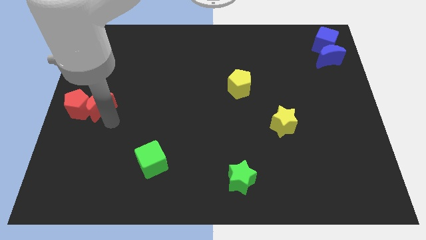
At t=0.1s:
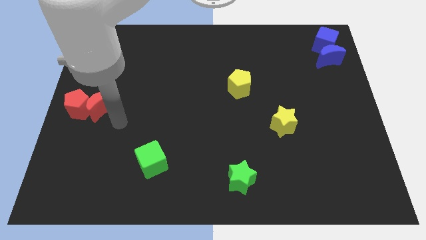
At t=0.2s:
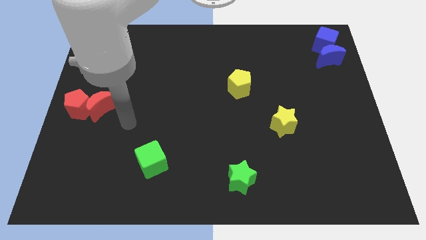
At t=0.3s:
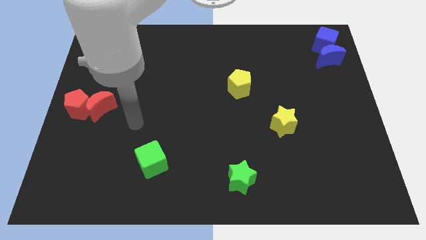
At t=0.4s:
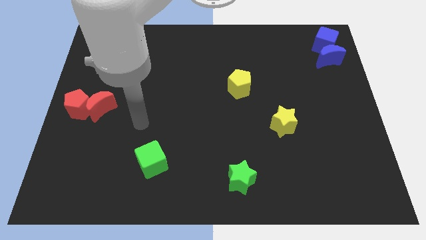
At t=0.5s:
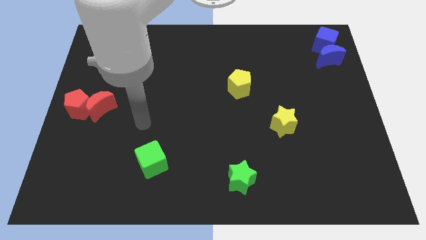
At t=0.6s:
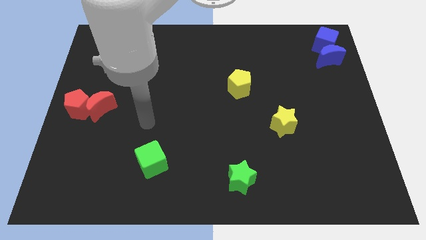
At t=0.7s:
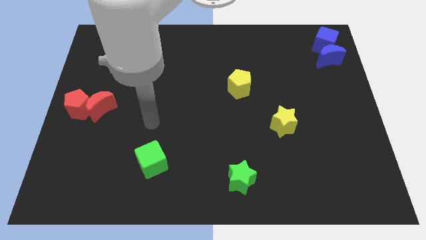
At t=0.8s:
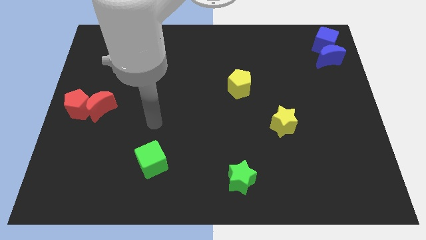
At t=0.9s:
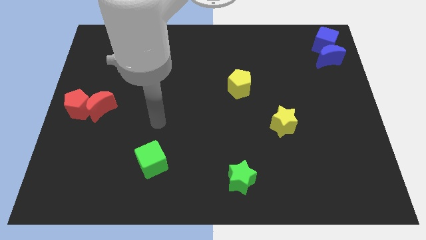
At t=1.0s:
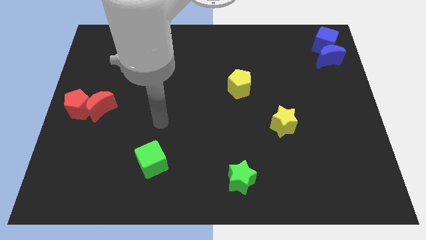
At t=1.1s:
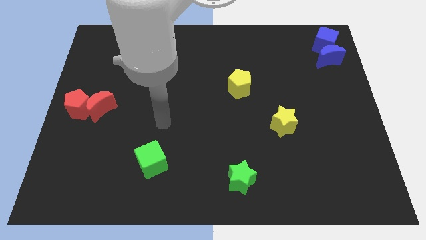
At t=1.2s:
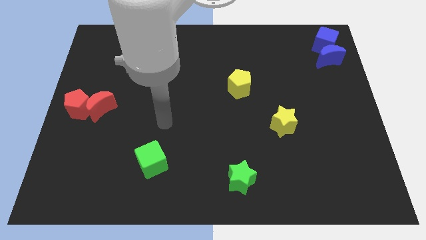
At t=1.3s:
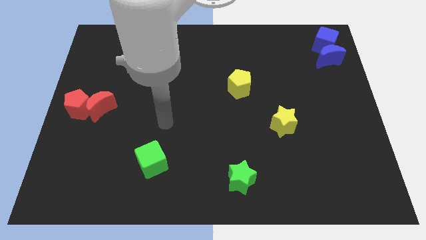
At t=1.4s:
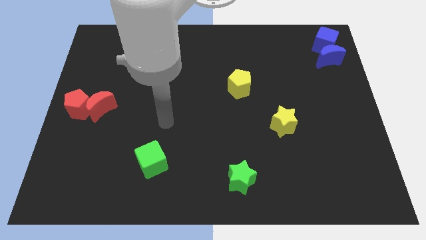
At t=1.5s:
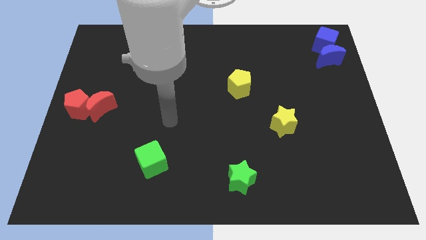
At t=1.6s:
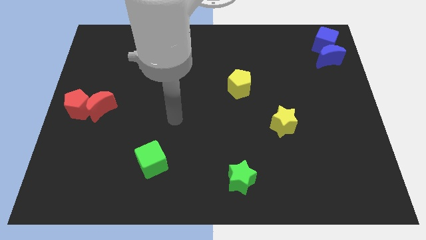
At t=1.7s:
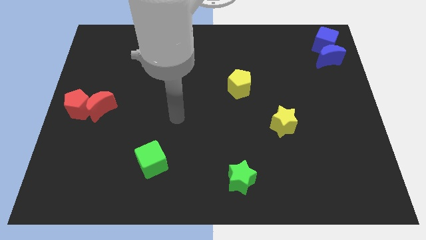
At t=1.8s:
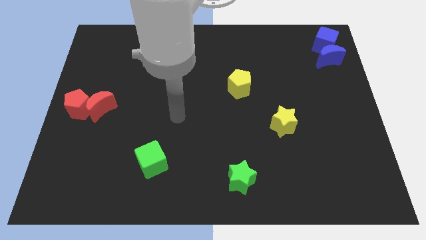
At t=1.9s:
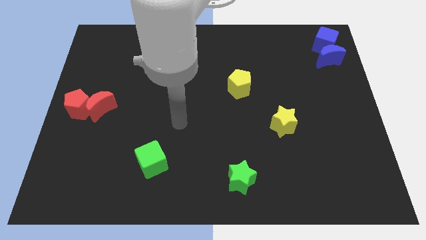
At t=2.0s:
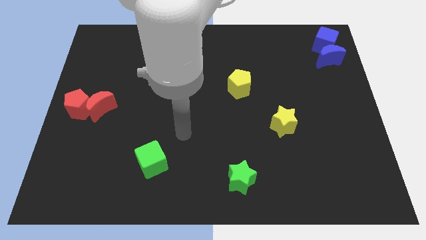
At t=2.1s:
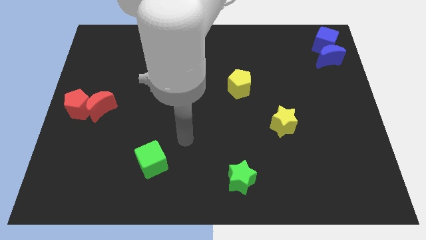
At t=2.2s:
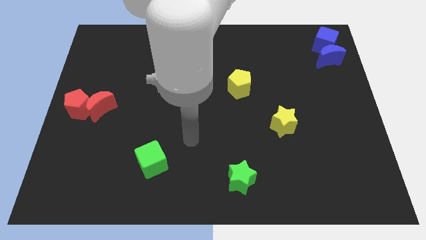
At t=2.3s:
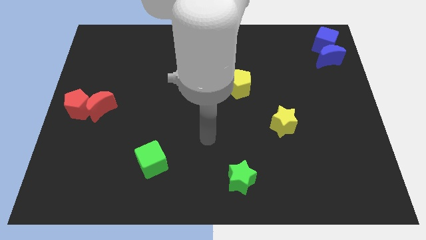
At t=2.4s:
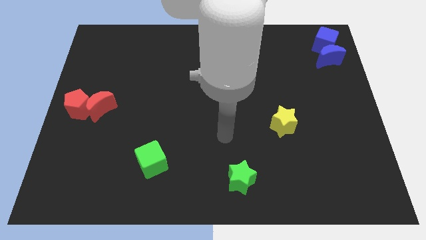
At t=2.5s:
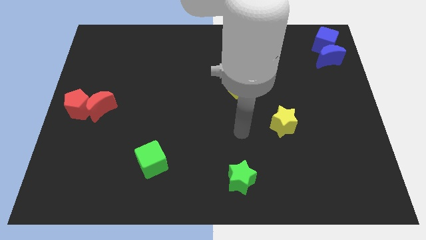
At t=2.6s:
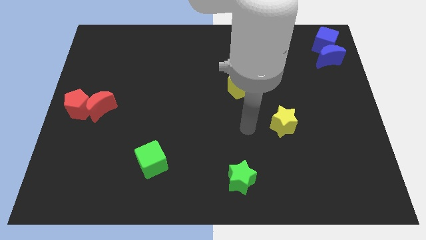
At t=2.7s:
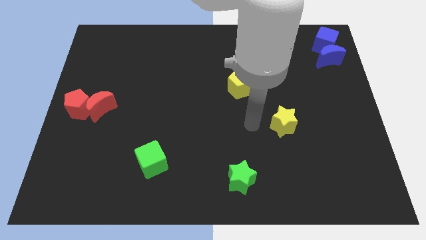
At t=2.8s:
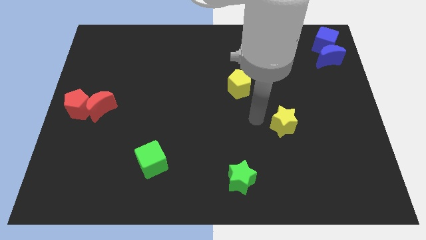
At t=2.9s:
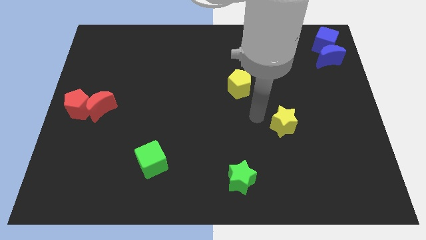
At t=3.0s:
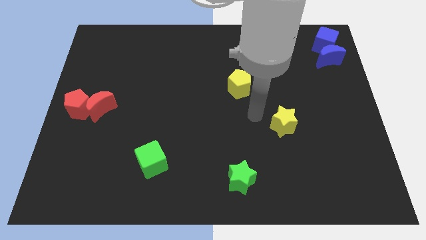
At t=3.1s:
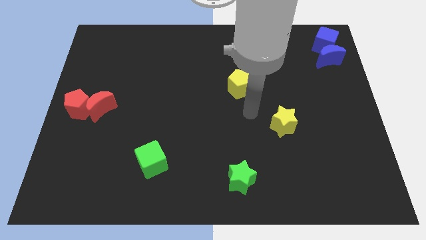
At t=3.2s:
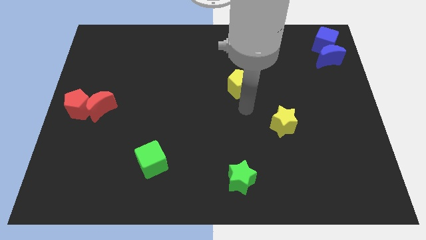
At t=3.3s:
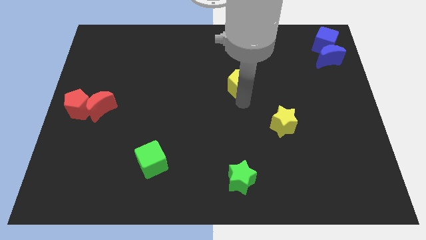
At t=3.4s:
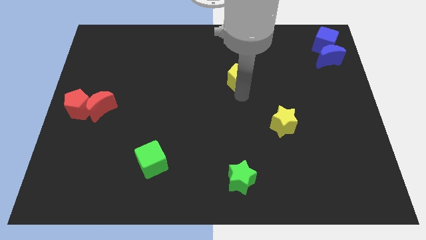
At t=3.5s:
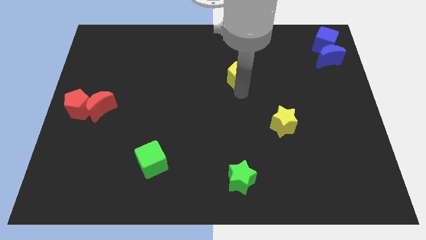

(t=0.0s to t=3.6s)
move your arm towards the yellow pentagon

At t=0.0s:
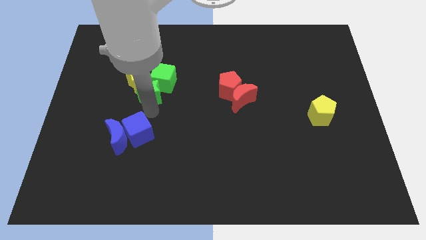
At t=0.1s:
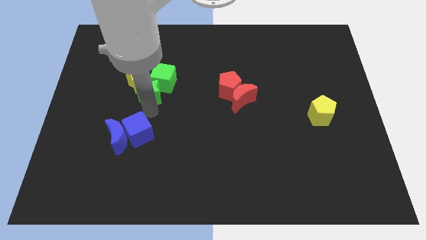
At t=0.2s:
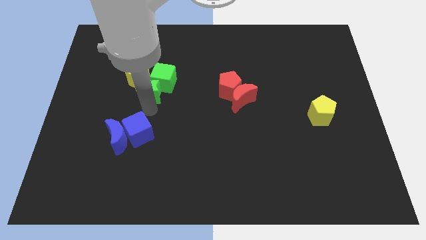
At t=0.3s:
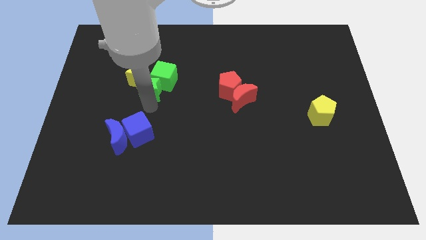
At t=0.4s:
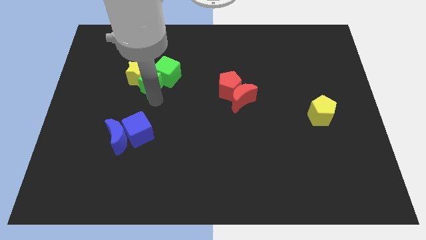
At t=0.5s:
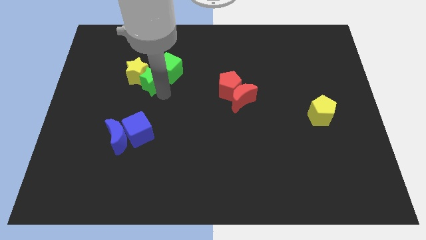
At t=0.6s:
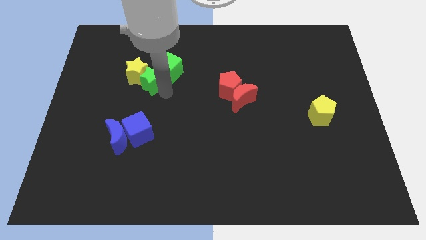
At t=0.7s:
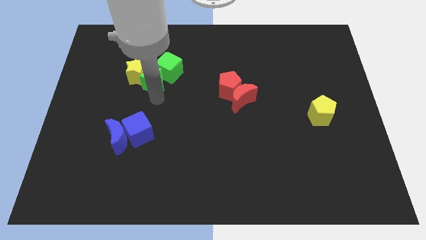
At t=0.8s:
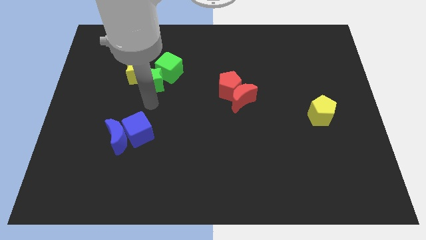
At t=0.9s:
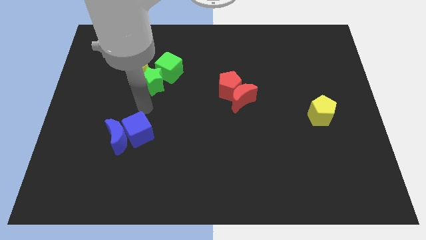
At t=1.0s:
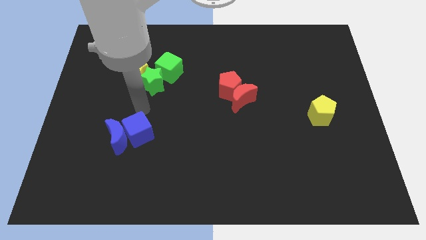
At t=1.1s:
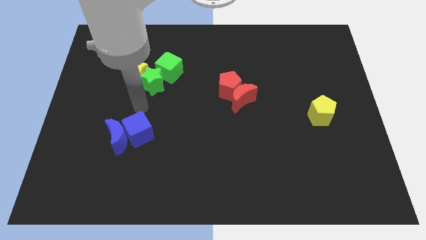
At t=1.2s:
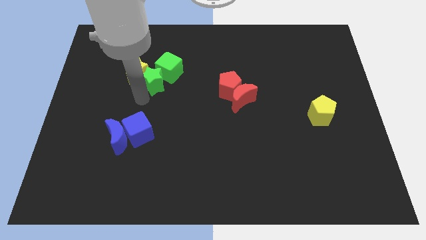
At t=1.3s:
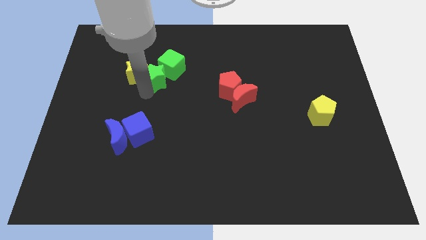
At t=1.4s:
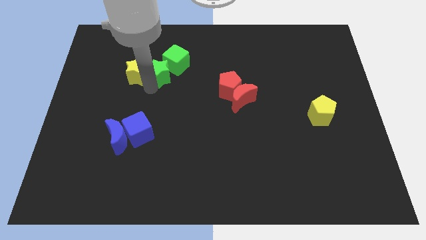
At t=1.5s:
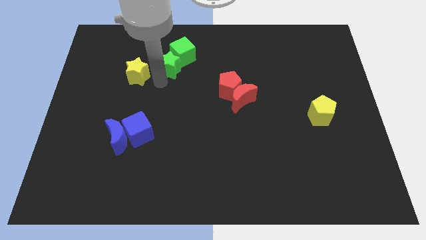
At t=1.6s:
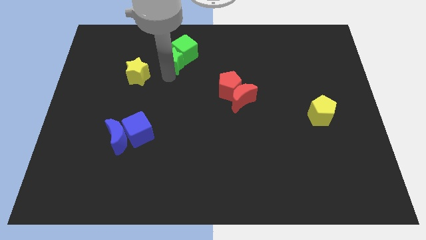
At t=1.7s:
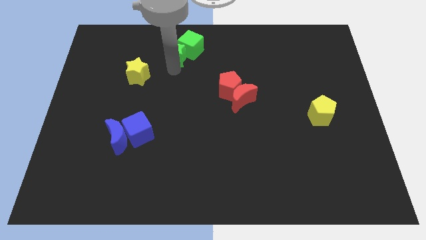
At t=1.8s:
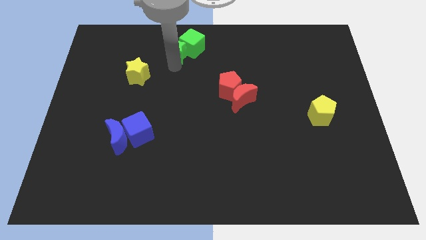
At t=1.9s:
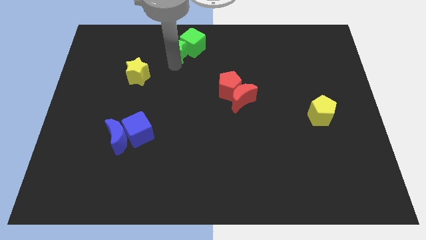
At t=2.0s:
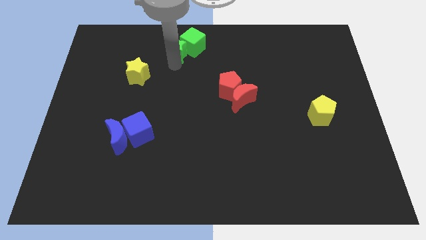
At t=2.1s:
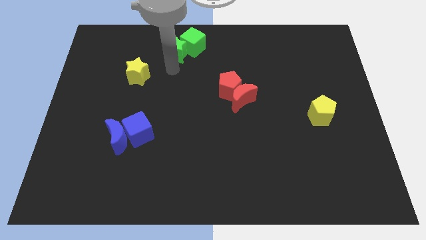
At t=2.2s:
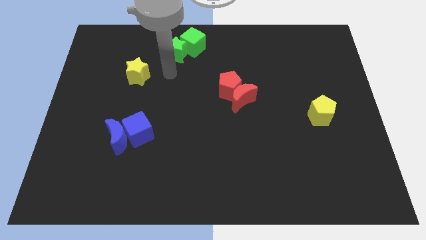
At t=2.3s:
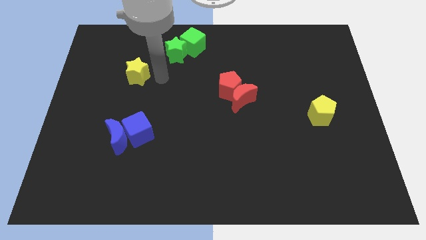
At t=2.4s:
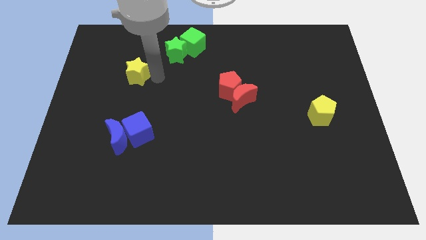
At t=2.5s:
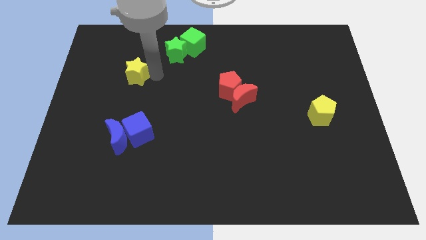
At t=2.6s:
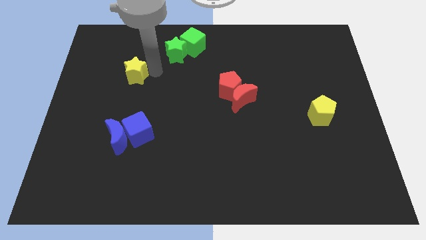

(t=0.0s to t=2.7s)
push the green star and green cube towards top

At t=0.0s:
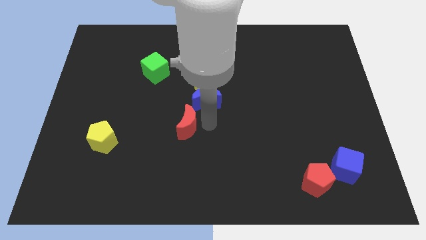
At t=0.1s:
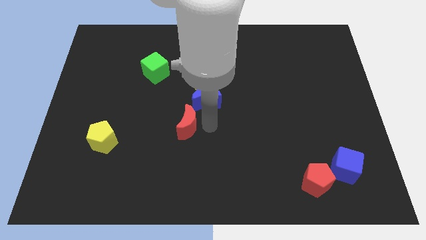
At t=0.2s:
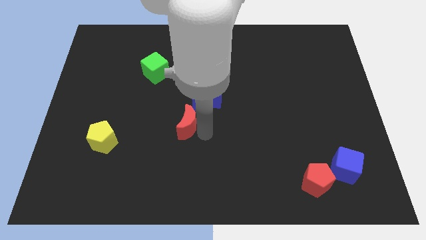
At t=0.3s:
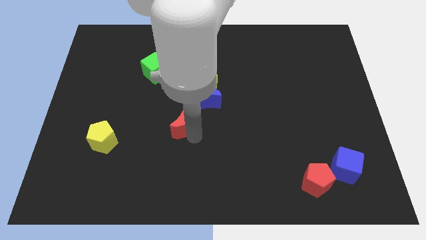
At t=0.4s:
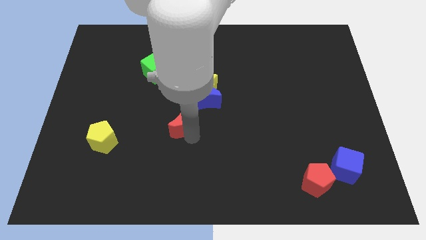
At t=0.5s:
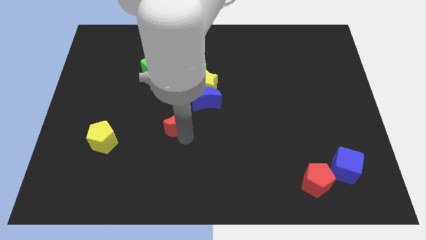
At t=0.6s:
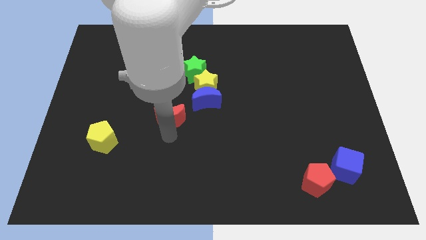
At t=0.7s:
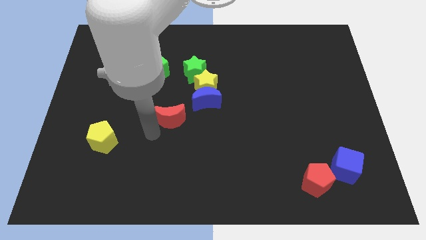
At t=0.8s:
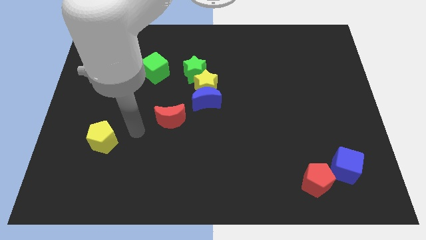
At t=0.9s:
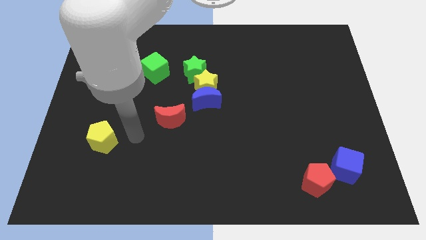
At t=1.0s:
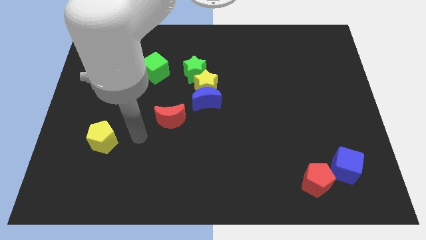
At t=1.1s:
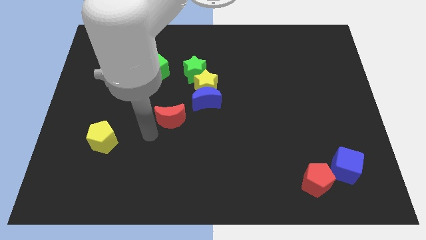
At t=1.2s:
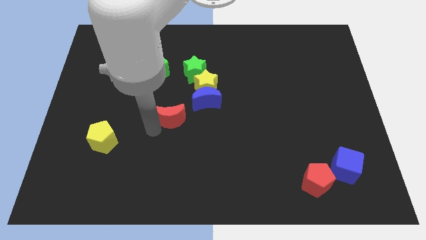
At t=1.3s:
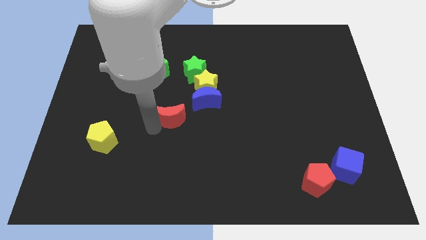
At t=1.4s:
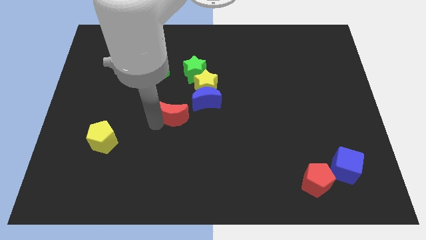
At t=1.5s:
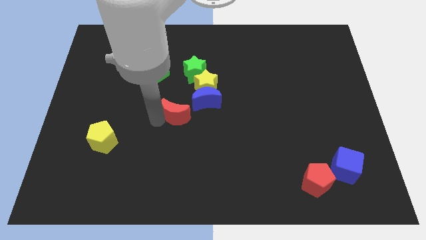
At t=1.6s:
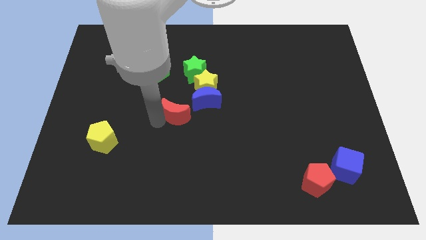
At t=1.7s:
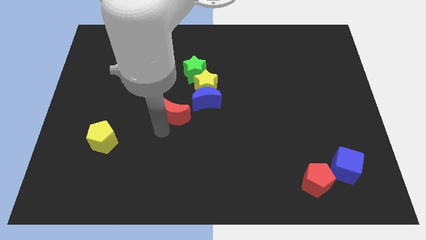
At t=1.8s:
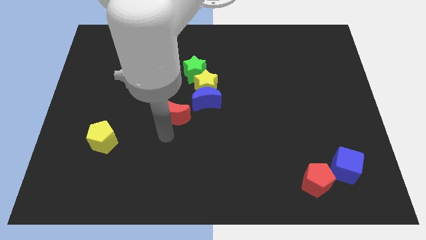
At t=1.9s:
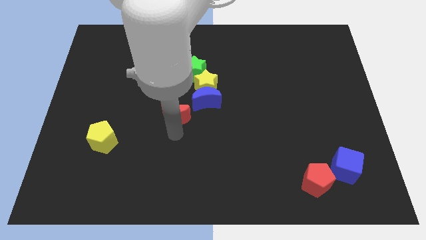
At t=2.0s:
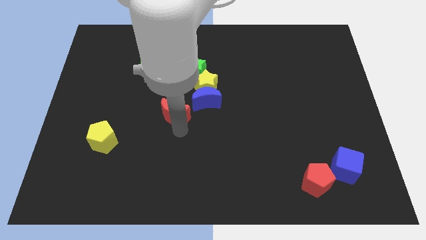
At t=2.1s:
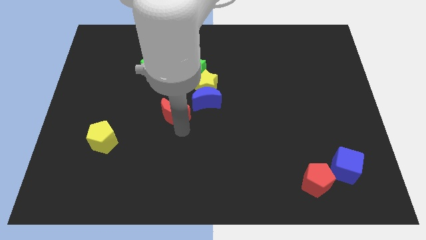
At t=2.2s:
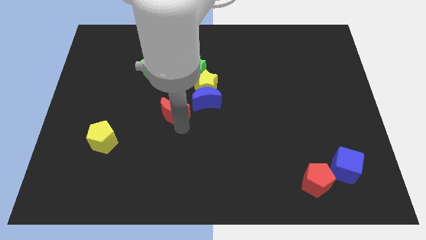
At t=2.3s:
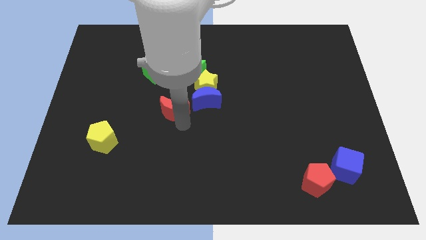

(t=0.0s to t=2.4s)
place the red crescent below the green cube

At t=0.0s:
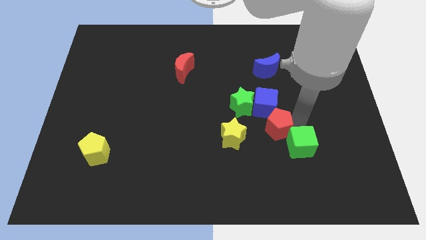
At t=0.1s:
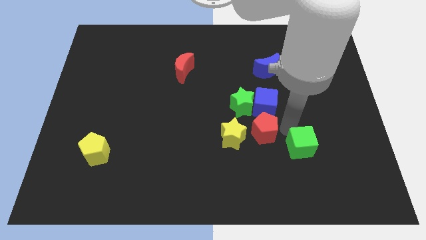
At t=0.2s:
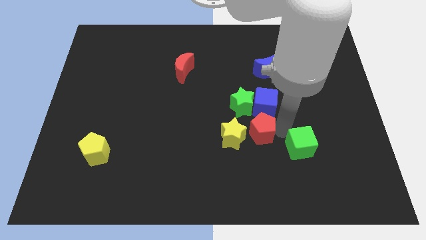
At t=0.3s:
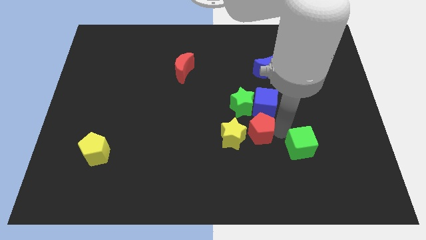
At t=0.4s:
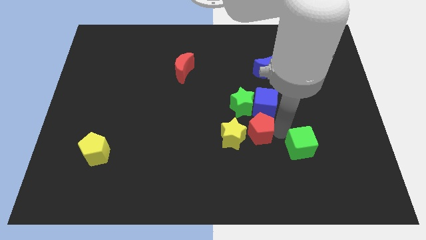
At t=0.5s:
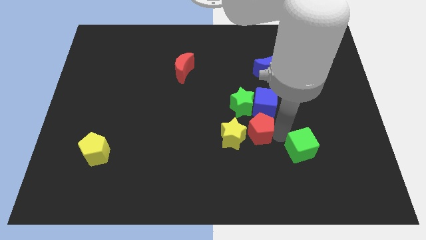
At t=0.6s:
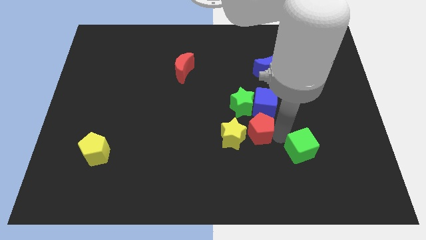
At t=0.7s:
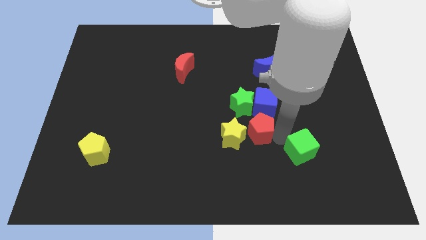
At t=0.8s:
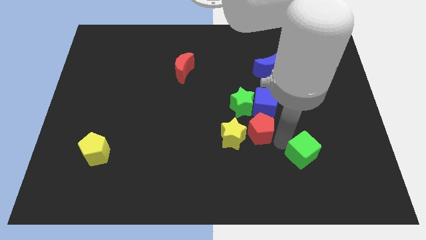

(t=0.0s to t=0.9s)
point your arm between red pentagon and green cube
